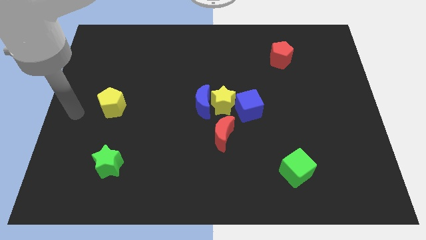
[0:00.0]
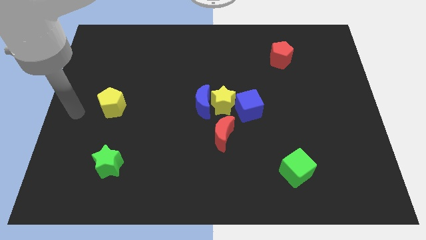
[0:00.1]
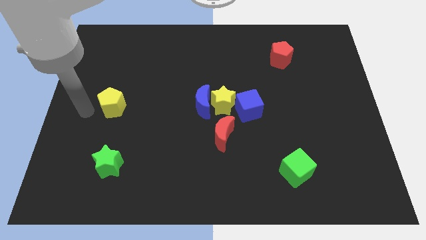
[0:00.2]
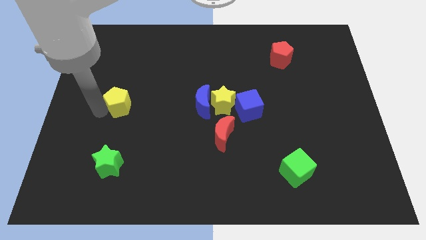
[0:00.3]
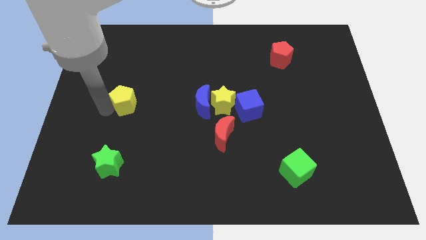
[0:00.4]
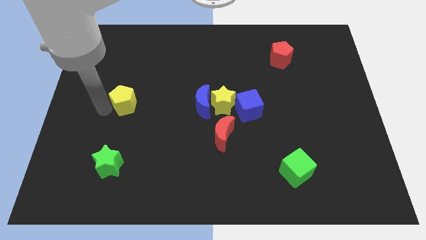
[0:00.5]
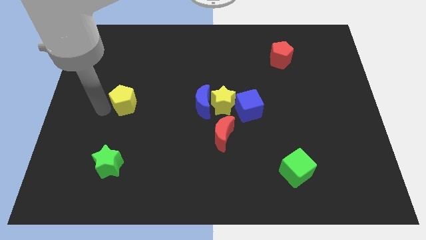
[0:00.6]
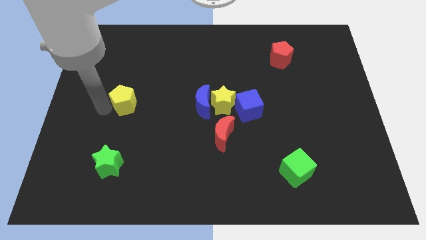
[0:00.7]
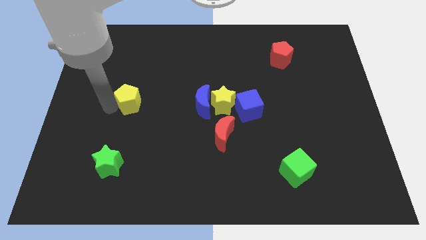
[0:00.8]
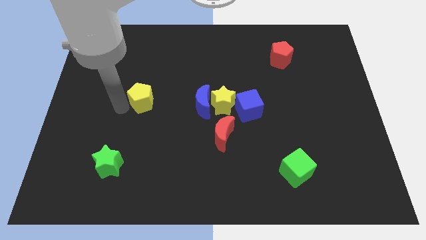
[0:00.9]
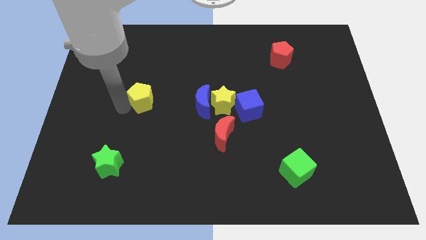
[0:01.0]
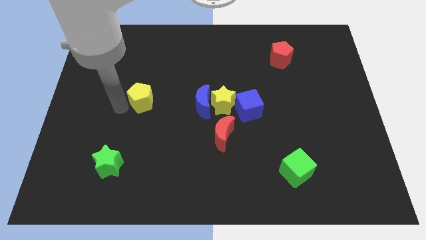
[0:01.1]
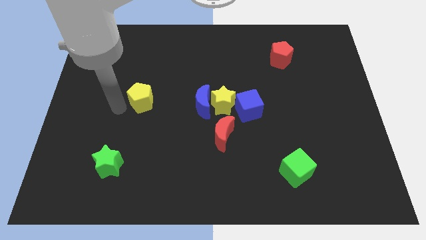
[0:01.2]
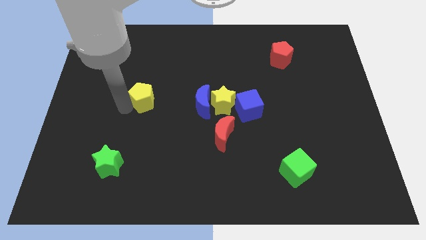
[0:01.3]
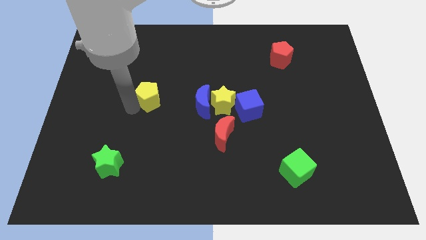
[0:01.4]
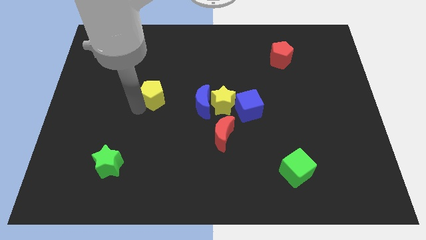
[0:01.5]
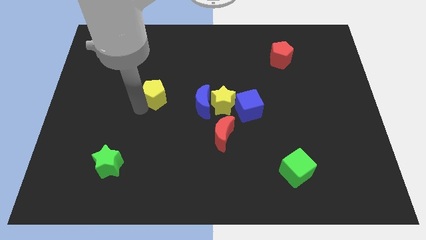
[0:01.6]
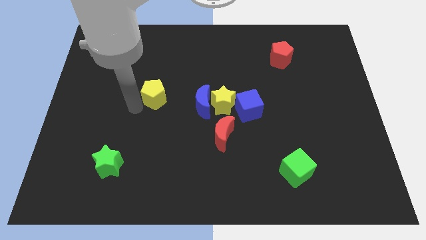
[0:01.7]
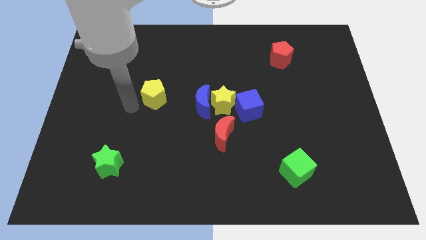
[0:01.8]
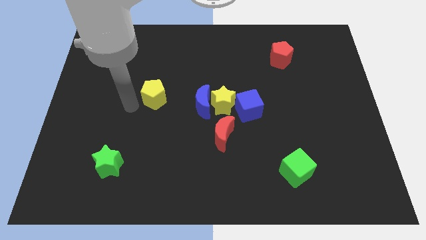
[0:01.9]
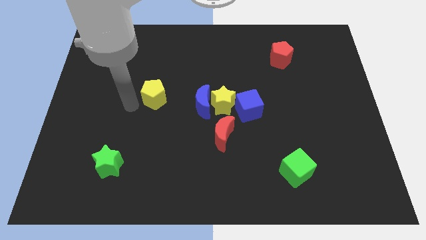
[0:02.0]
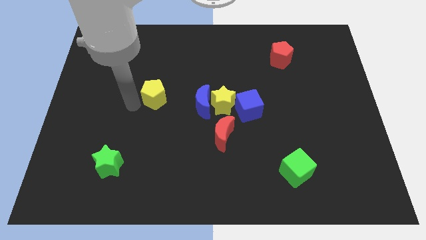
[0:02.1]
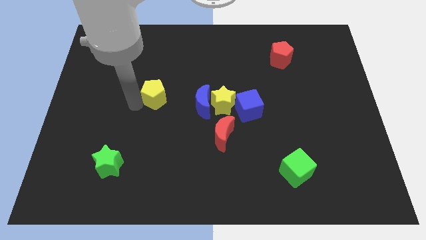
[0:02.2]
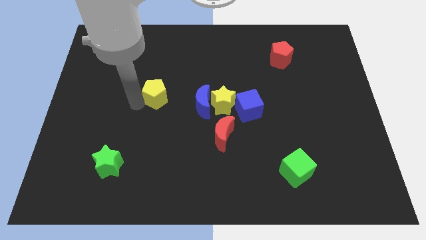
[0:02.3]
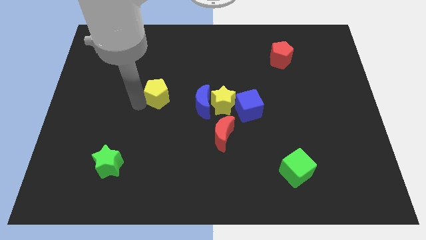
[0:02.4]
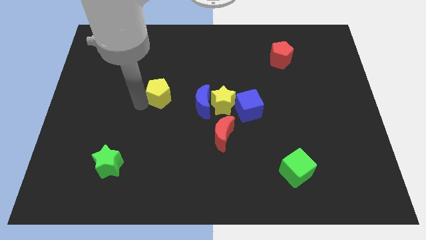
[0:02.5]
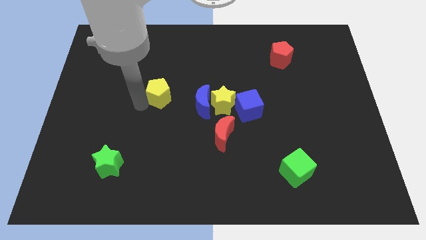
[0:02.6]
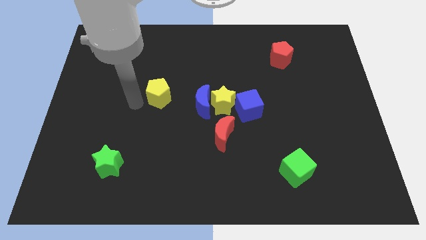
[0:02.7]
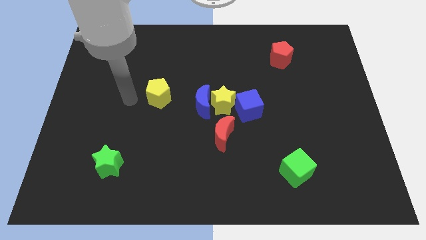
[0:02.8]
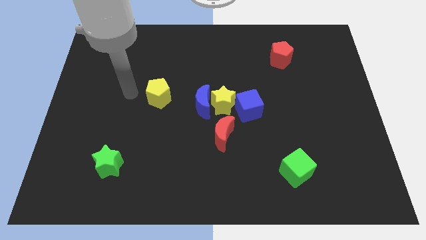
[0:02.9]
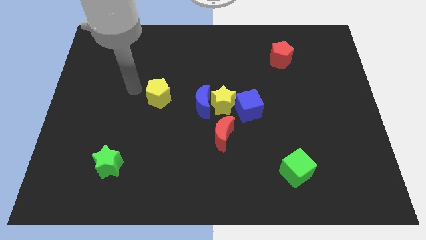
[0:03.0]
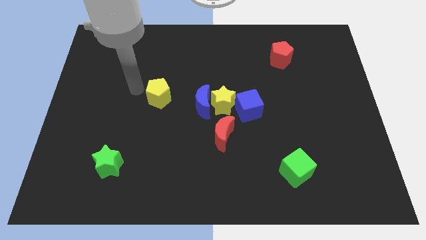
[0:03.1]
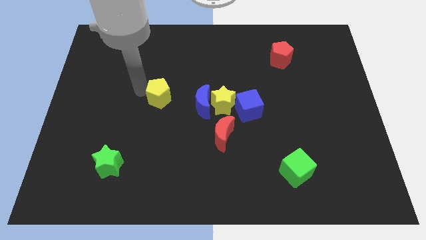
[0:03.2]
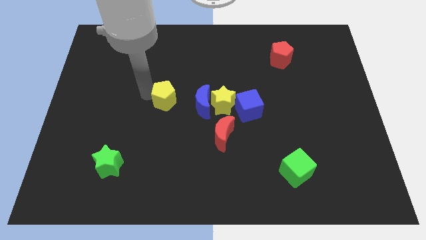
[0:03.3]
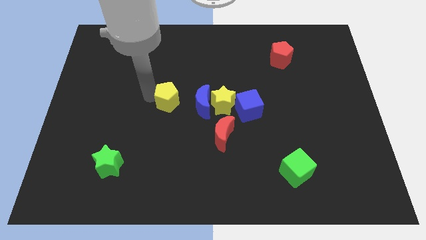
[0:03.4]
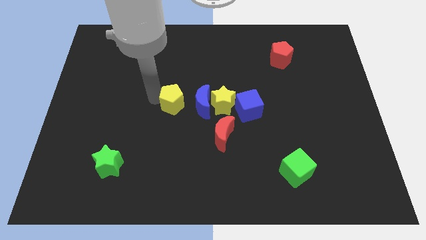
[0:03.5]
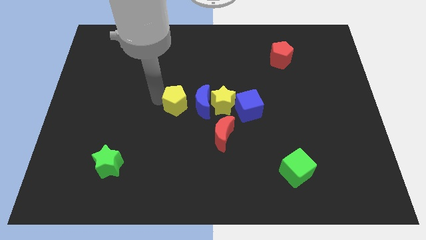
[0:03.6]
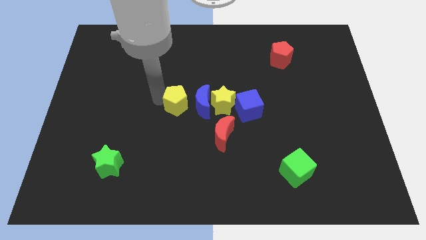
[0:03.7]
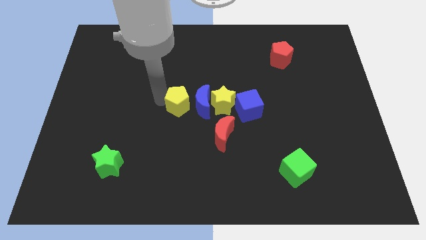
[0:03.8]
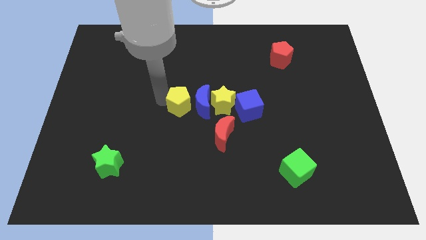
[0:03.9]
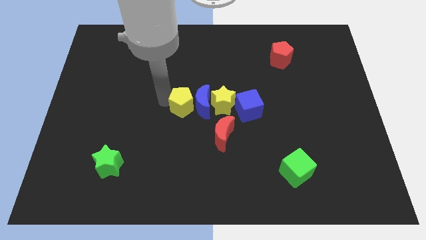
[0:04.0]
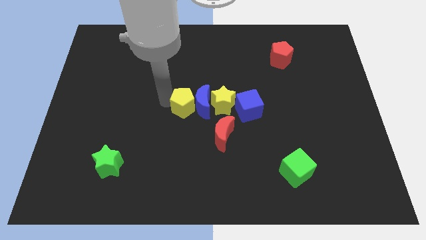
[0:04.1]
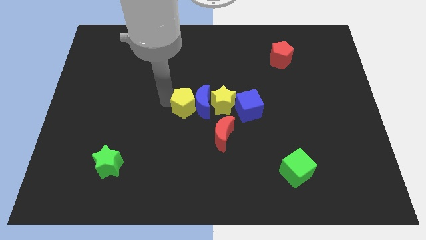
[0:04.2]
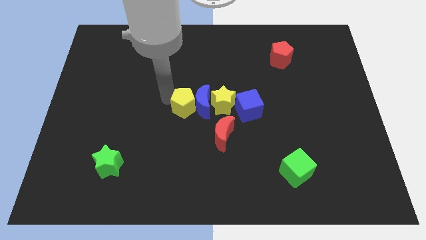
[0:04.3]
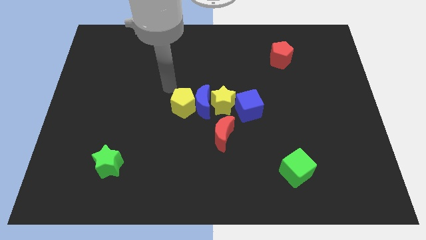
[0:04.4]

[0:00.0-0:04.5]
place the yellow pentagon at the left side of the horizontal line of blocks at the center of the board

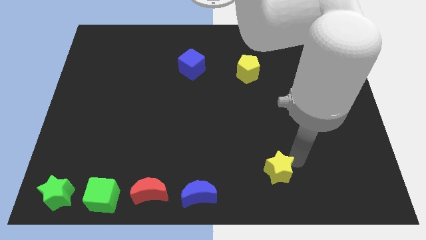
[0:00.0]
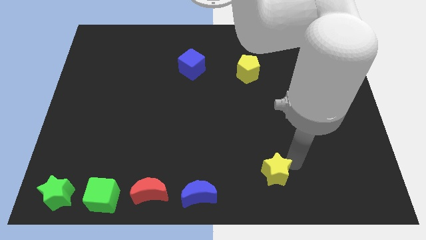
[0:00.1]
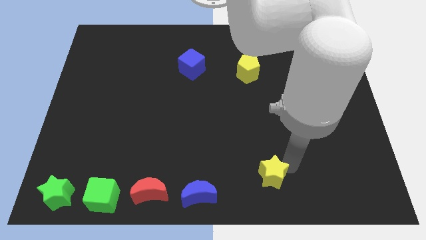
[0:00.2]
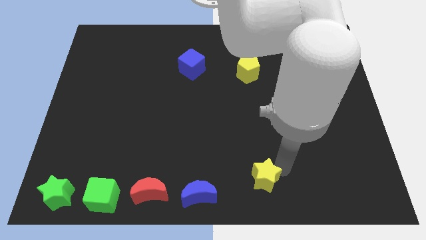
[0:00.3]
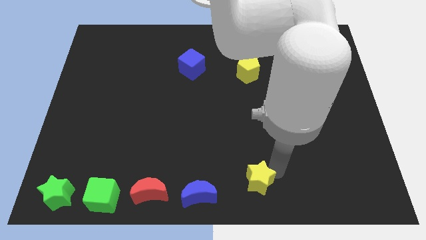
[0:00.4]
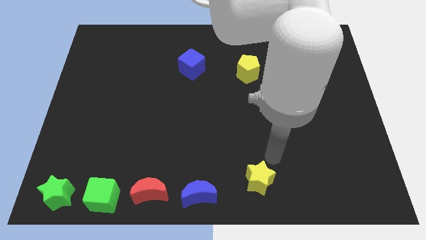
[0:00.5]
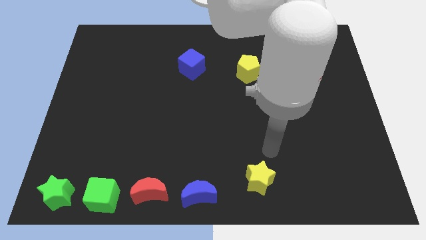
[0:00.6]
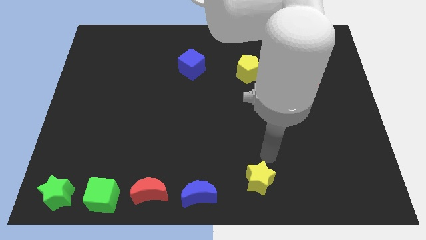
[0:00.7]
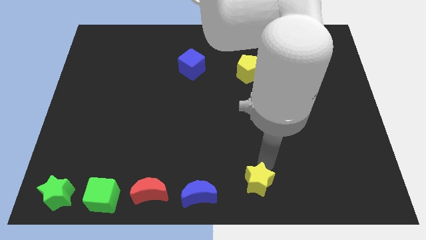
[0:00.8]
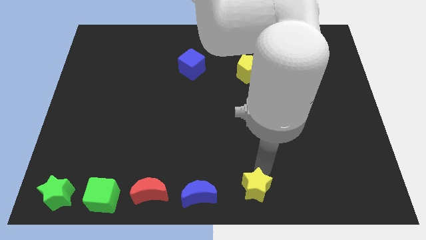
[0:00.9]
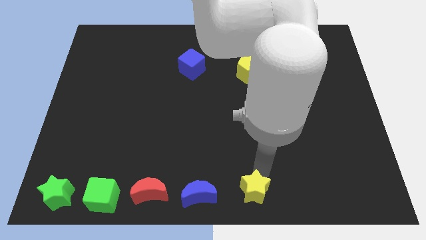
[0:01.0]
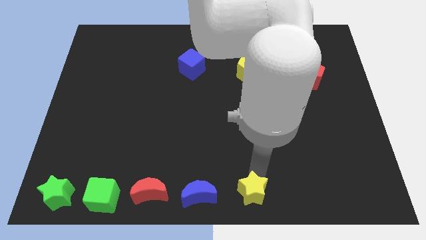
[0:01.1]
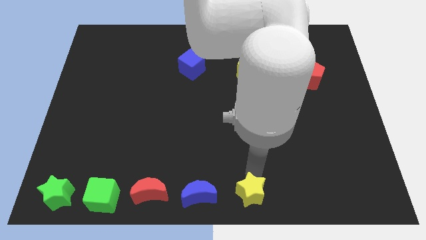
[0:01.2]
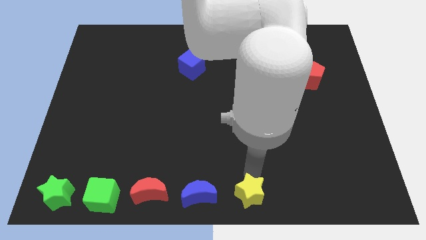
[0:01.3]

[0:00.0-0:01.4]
put the yellow star parallel to the blue crescent

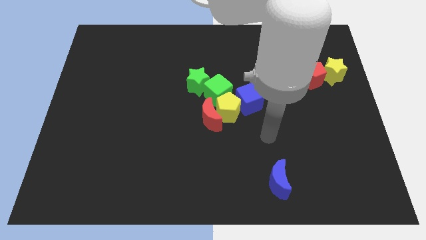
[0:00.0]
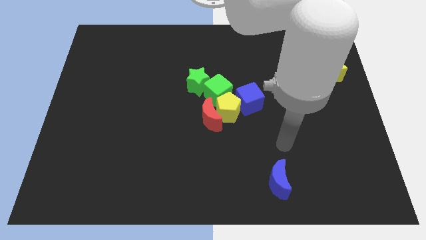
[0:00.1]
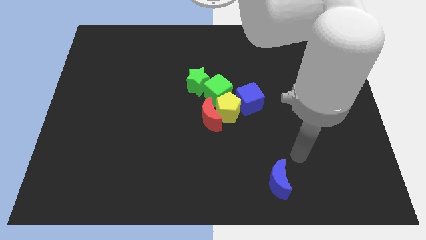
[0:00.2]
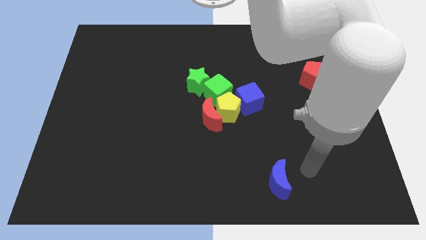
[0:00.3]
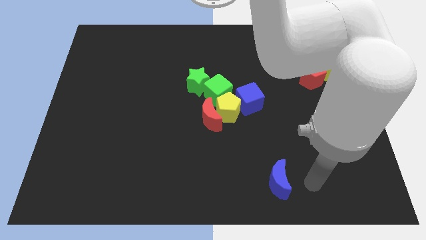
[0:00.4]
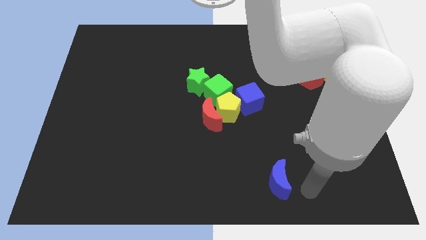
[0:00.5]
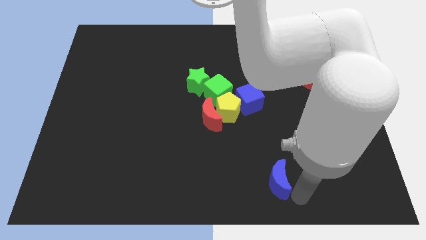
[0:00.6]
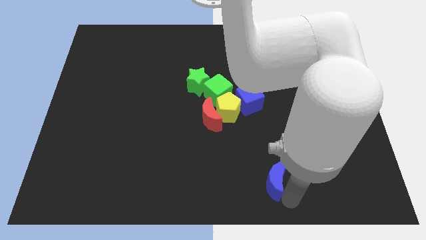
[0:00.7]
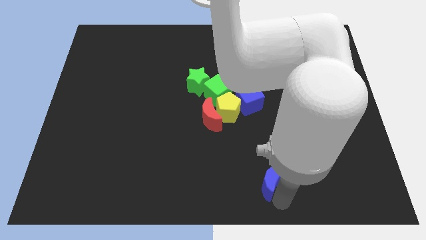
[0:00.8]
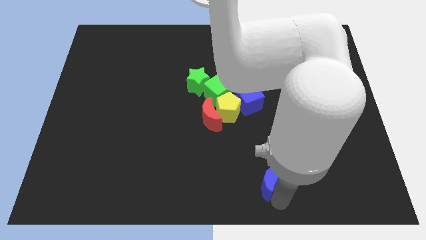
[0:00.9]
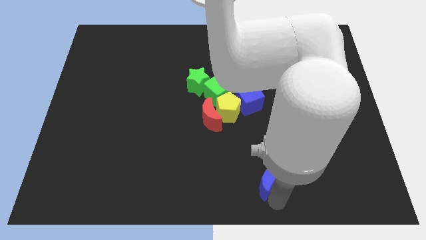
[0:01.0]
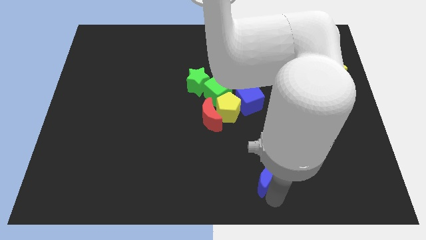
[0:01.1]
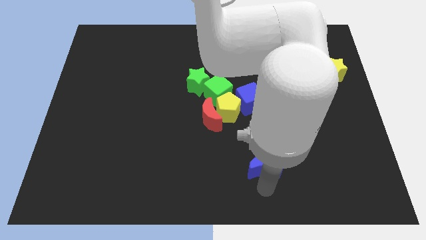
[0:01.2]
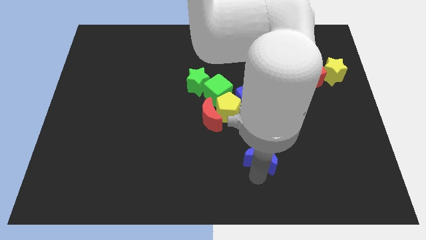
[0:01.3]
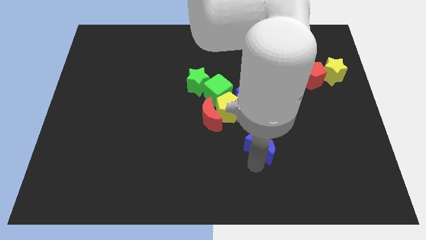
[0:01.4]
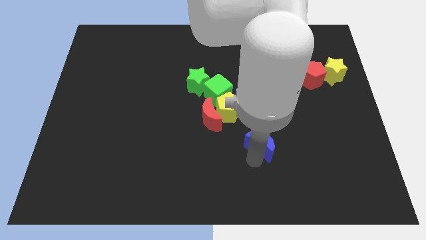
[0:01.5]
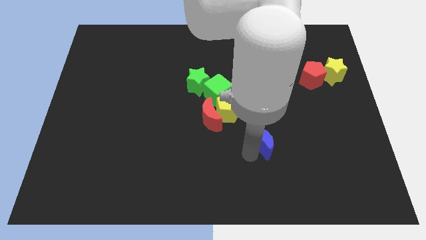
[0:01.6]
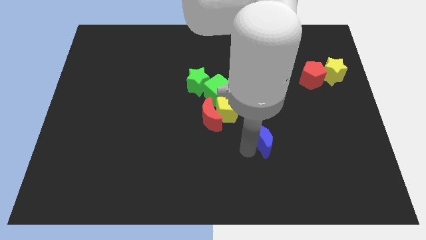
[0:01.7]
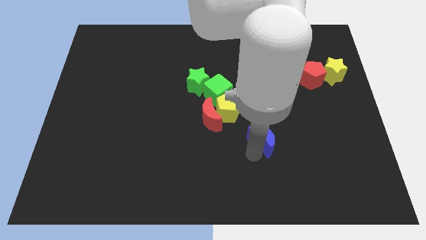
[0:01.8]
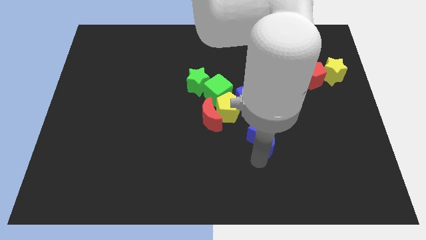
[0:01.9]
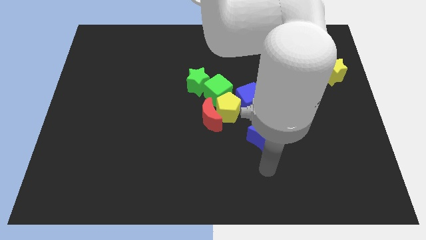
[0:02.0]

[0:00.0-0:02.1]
move the blue crescent parallel to the bottom of the blue cube

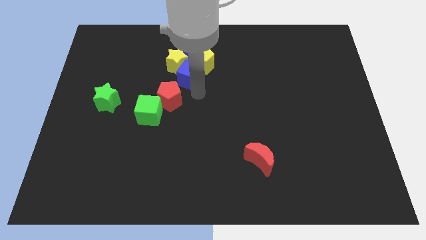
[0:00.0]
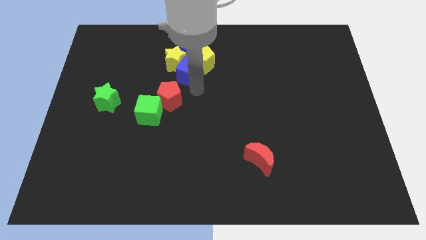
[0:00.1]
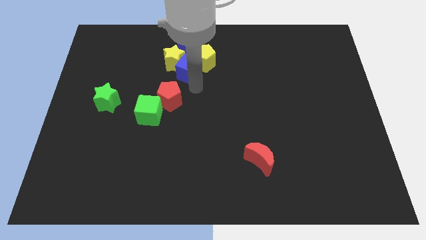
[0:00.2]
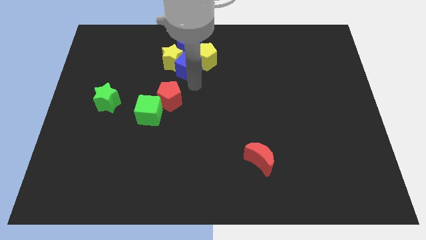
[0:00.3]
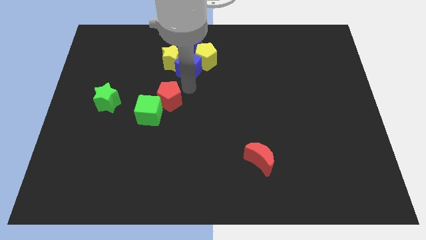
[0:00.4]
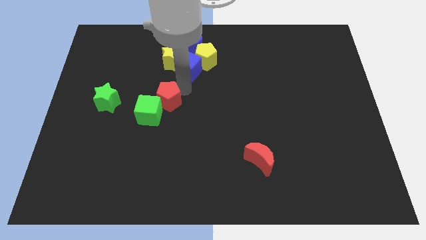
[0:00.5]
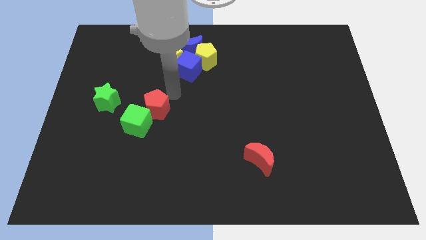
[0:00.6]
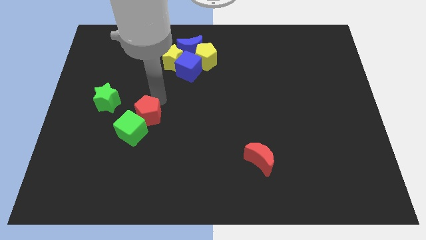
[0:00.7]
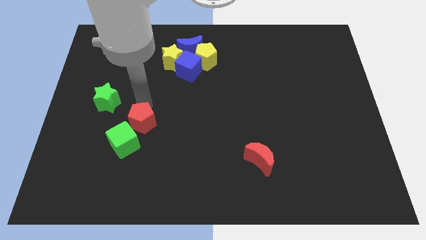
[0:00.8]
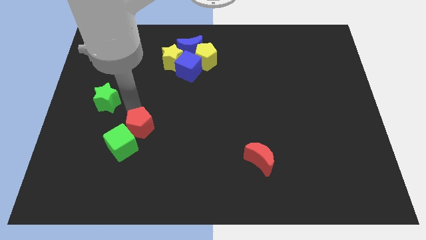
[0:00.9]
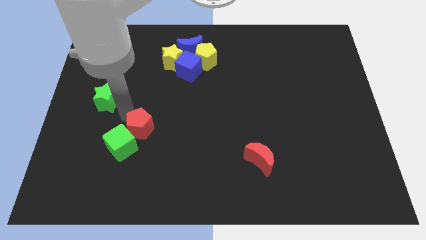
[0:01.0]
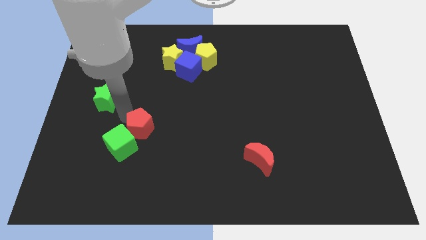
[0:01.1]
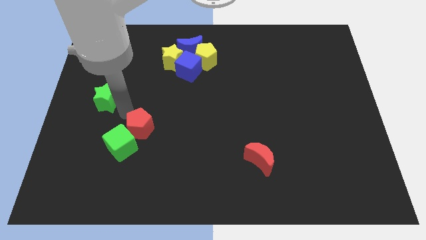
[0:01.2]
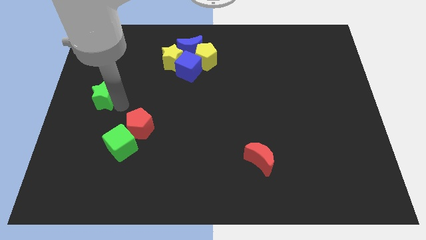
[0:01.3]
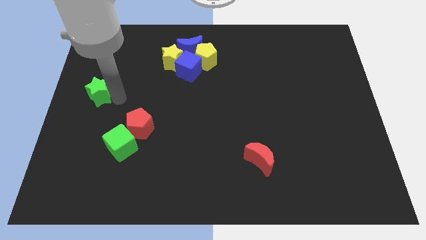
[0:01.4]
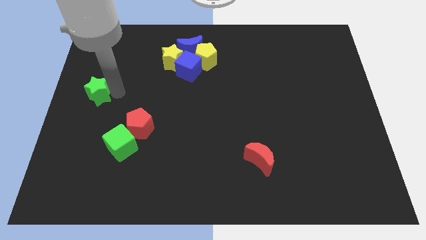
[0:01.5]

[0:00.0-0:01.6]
move red pentagon along with green cube towards bottom
